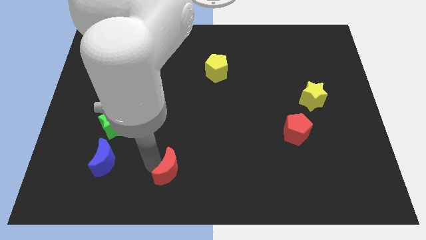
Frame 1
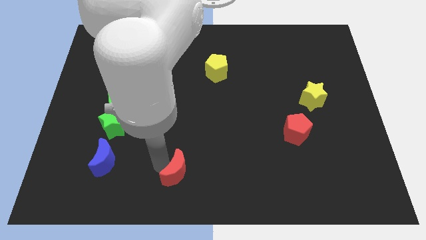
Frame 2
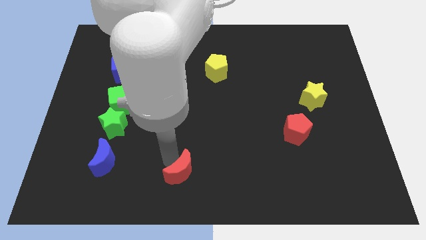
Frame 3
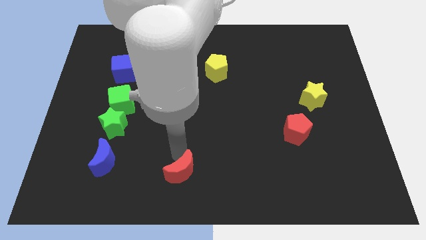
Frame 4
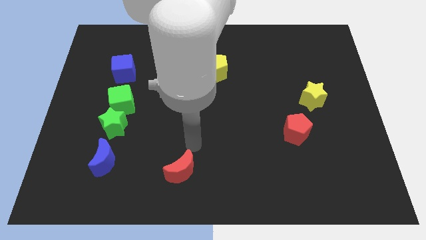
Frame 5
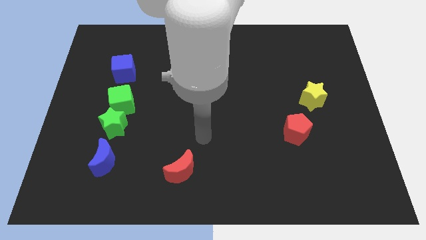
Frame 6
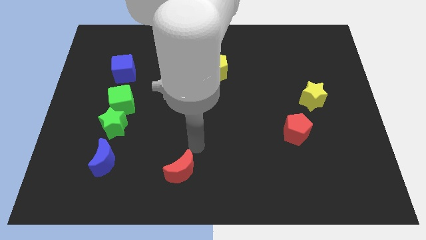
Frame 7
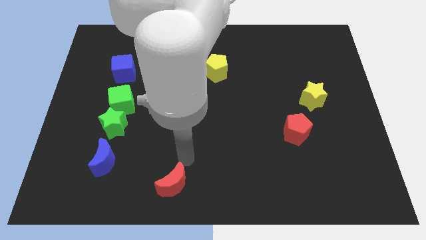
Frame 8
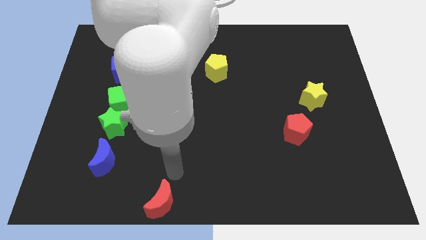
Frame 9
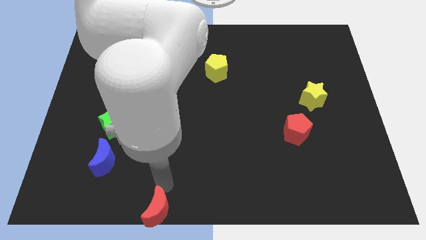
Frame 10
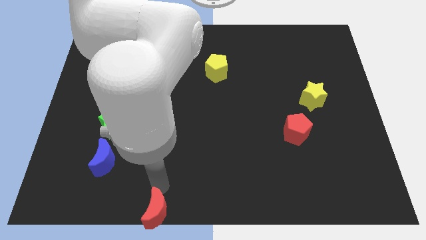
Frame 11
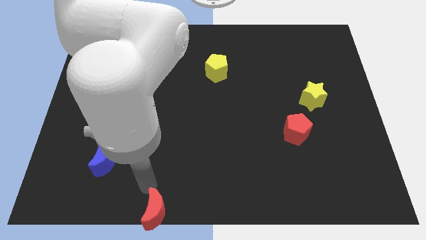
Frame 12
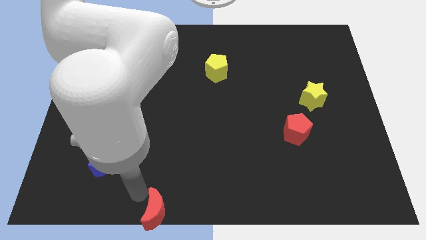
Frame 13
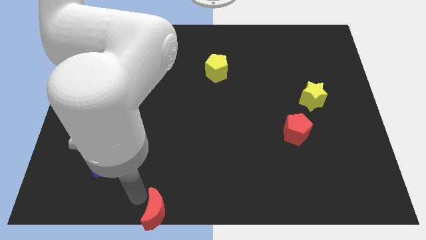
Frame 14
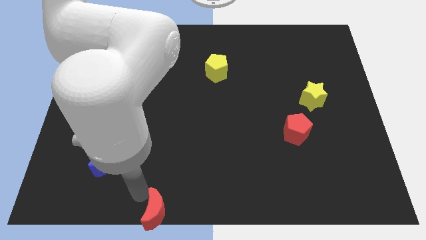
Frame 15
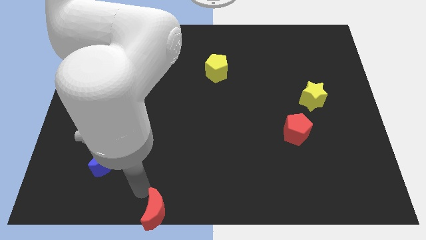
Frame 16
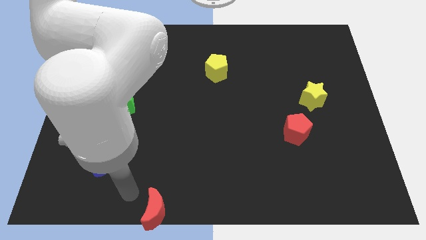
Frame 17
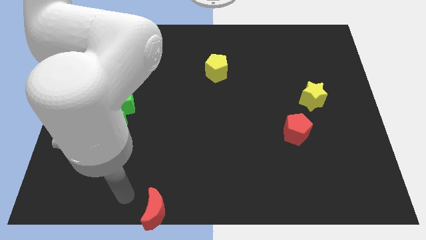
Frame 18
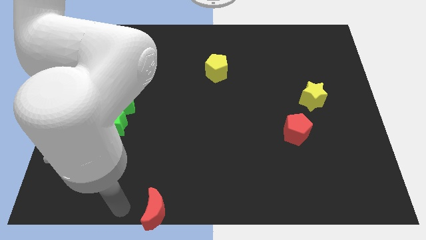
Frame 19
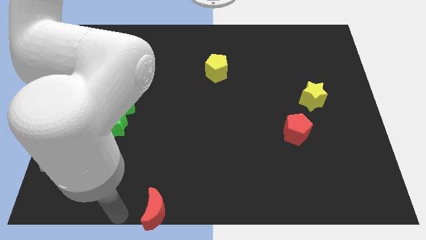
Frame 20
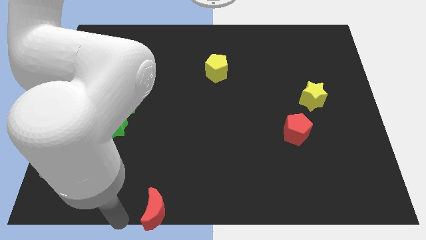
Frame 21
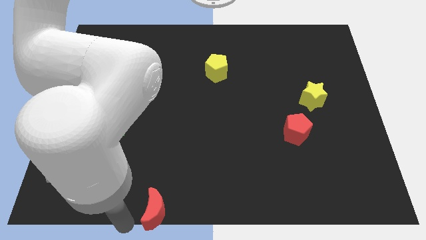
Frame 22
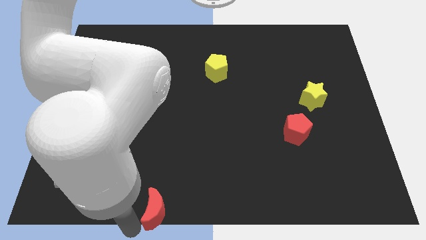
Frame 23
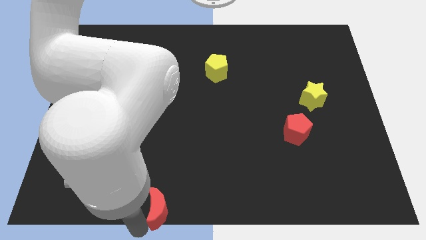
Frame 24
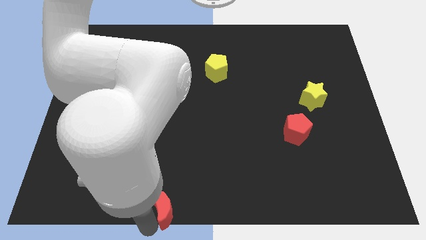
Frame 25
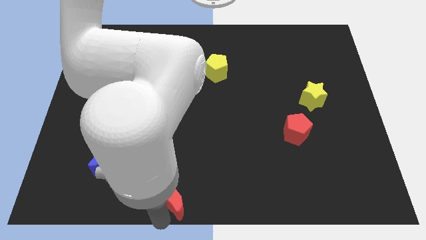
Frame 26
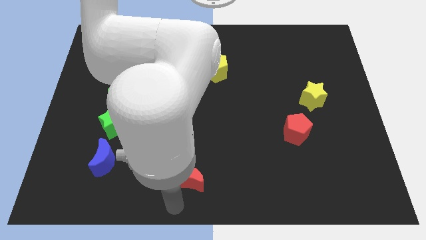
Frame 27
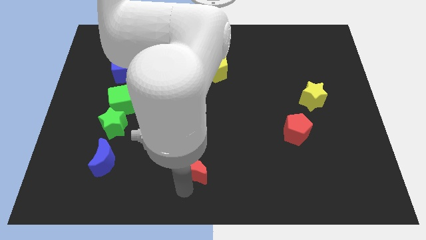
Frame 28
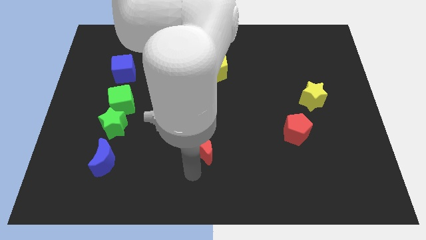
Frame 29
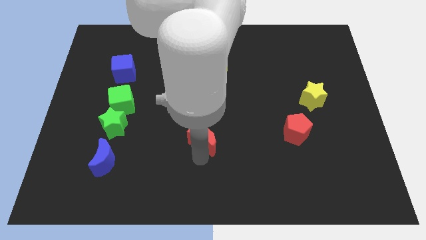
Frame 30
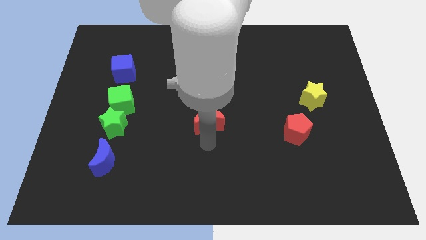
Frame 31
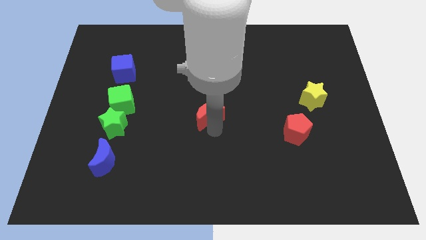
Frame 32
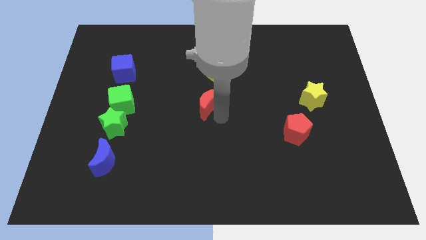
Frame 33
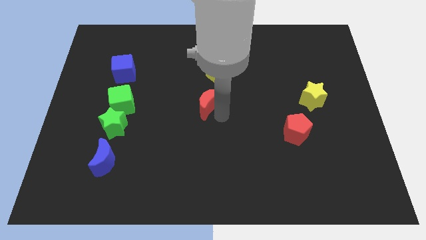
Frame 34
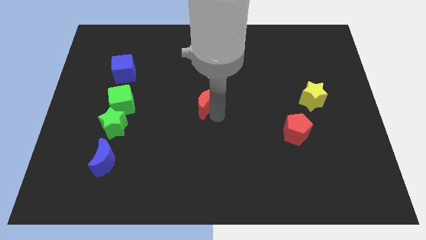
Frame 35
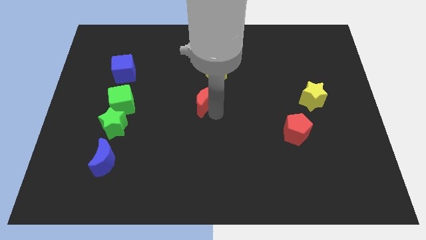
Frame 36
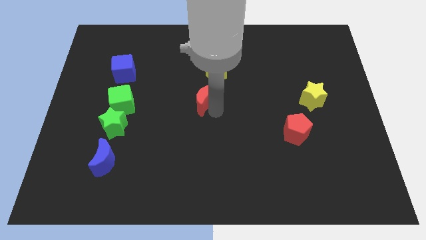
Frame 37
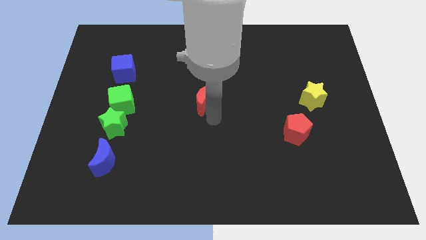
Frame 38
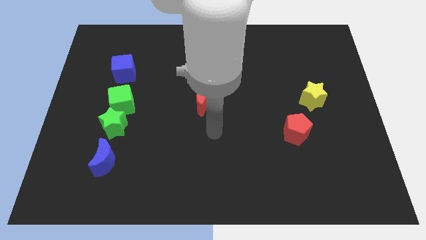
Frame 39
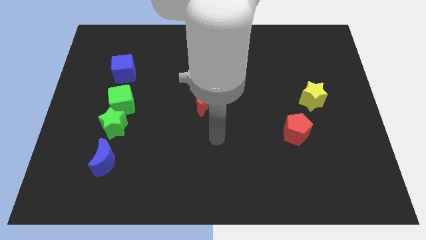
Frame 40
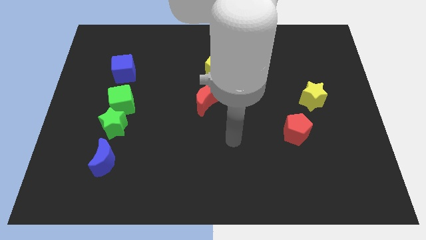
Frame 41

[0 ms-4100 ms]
place the red crescent to the bottom of the yellow pentagon

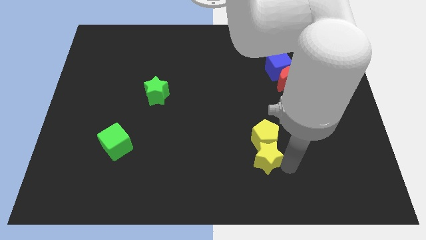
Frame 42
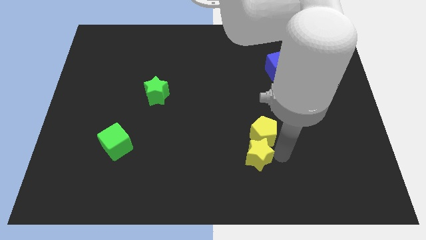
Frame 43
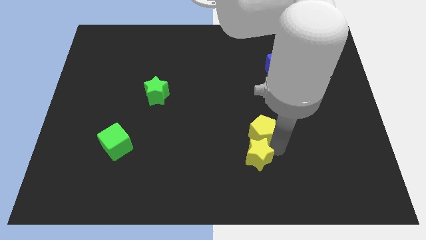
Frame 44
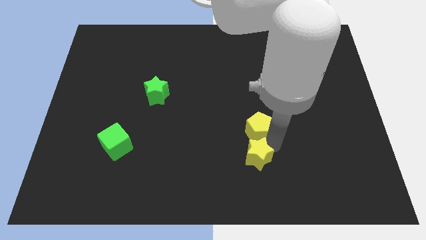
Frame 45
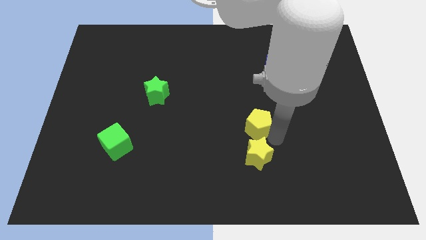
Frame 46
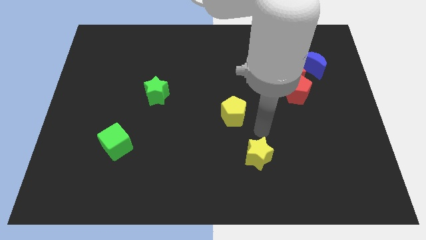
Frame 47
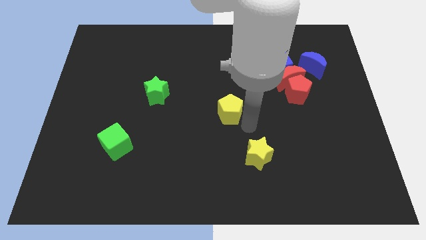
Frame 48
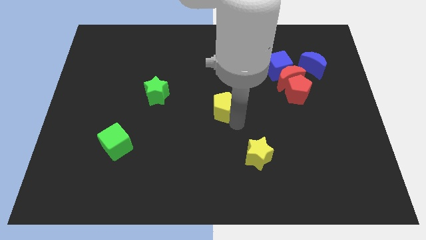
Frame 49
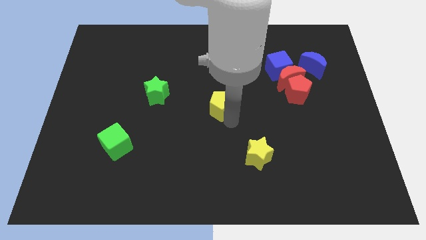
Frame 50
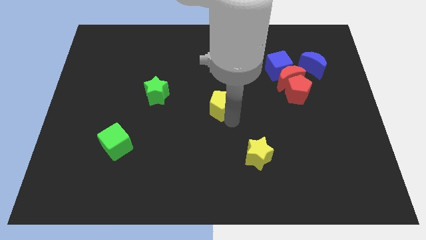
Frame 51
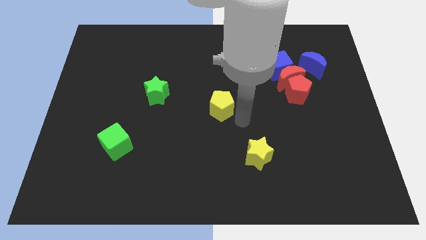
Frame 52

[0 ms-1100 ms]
move the yellow pentagon to the center of the board

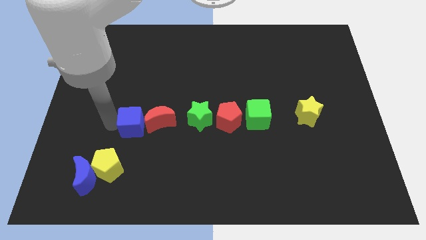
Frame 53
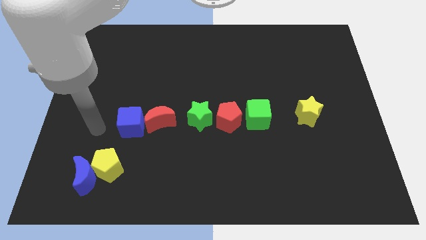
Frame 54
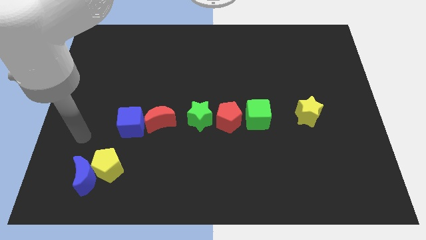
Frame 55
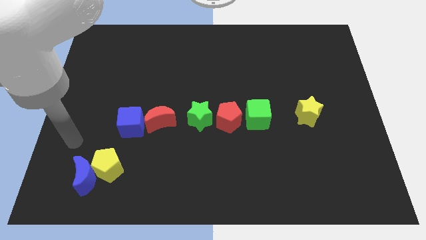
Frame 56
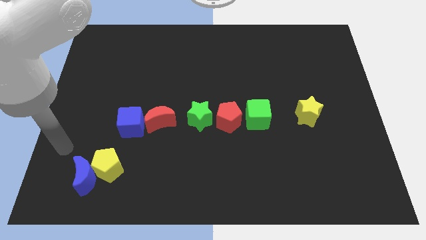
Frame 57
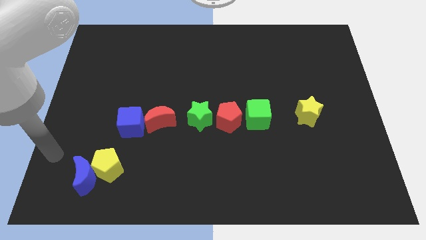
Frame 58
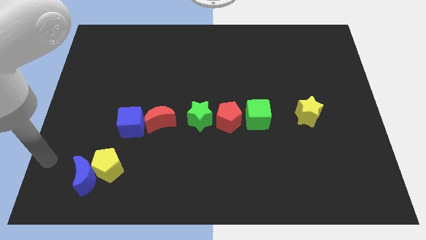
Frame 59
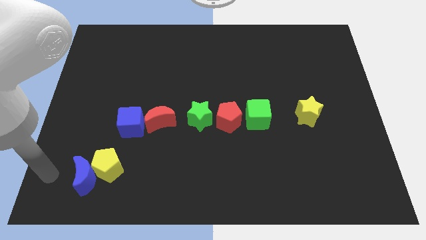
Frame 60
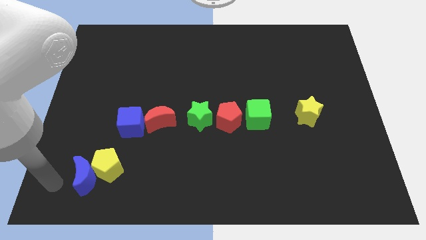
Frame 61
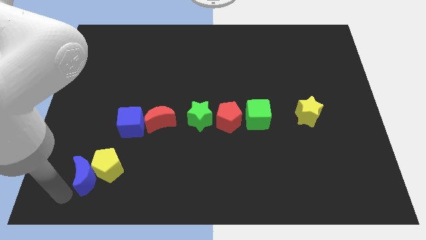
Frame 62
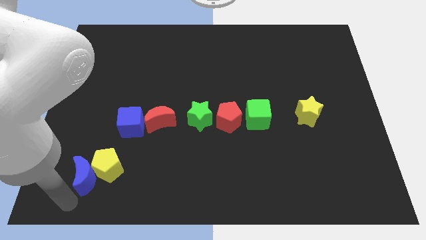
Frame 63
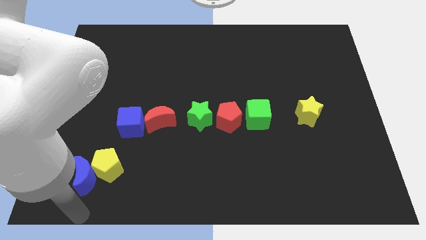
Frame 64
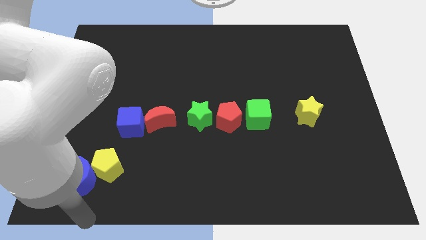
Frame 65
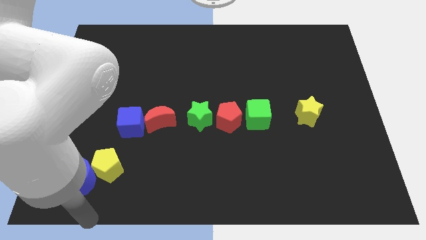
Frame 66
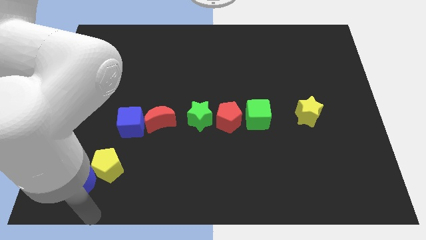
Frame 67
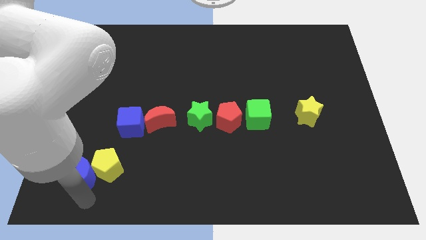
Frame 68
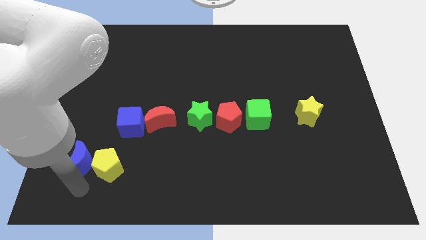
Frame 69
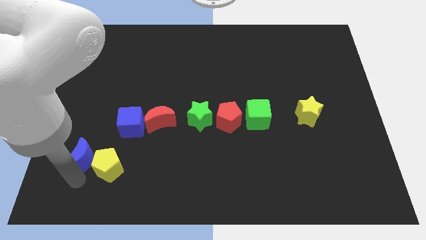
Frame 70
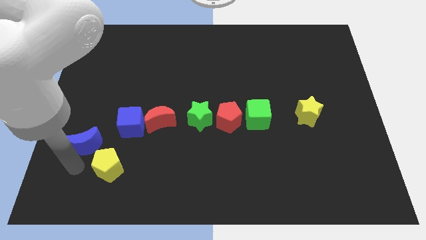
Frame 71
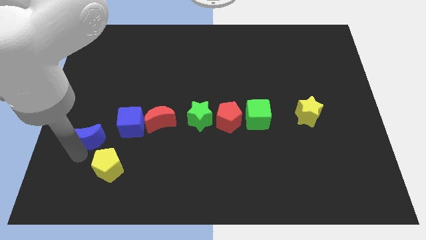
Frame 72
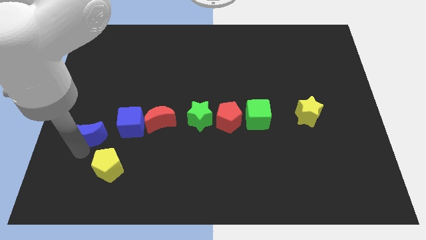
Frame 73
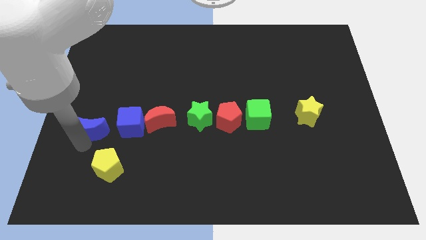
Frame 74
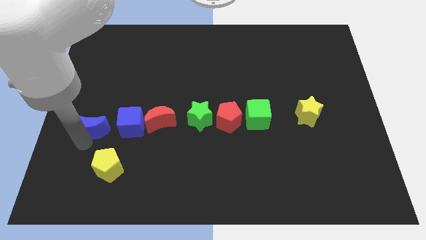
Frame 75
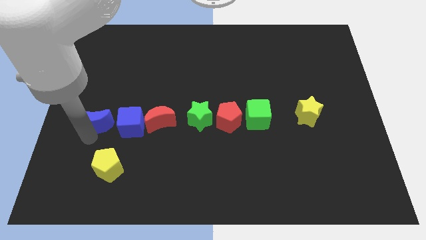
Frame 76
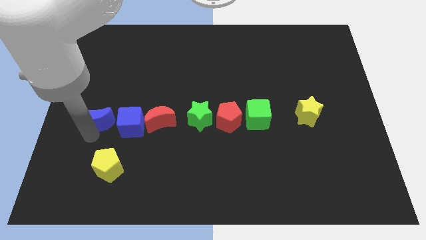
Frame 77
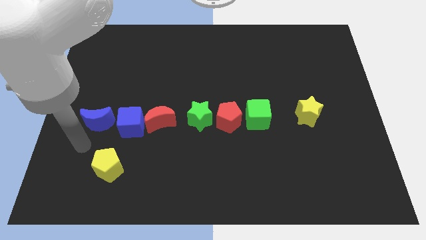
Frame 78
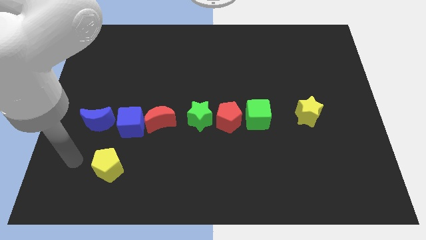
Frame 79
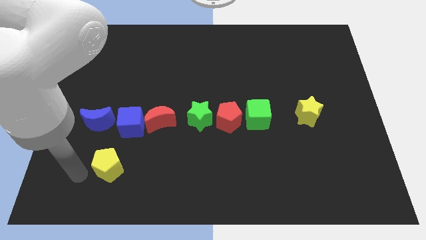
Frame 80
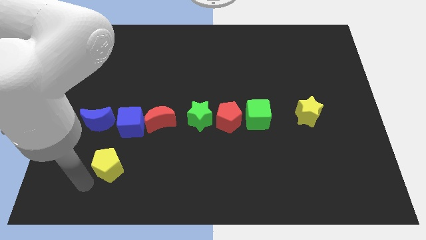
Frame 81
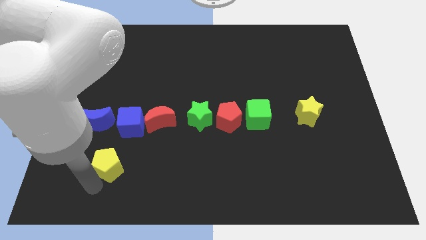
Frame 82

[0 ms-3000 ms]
push the blue crescent to the left of the blue cube

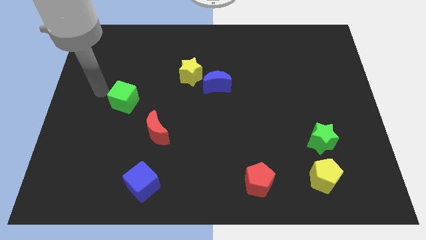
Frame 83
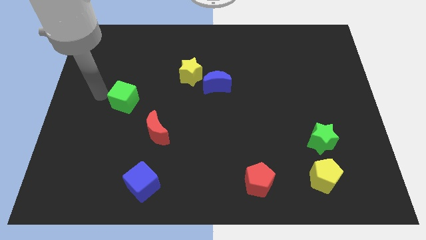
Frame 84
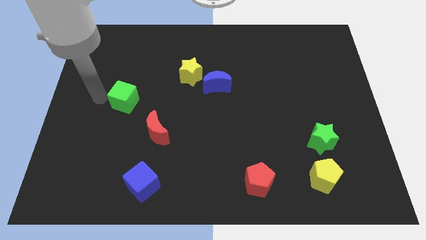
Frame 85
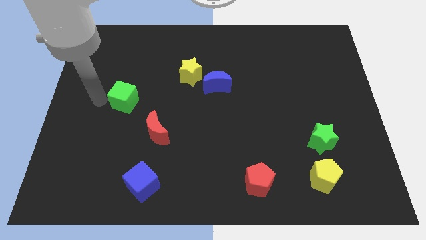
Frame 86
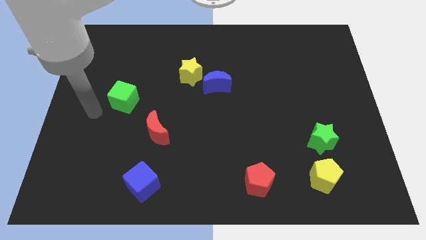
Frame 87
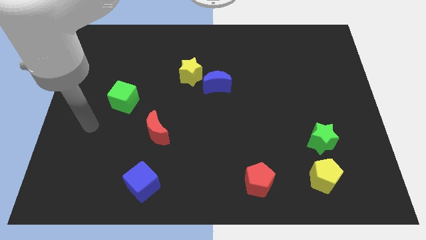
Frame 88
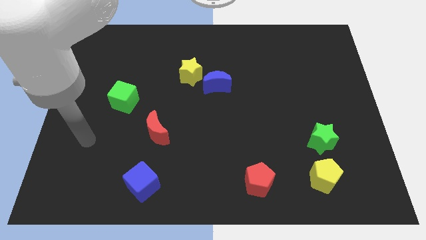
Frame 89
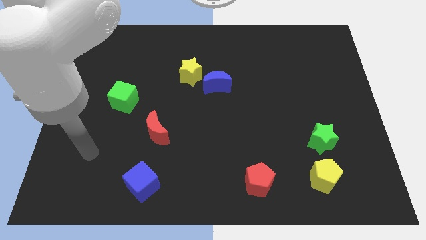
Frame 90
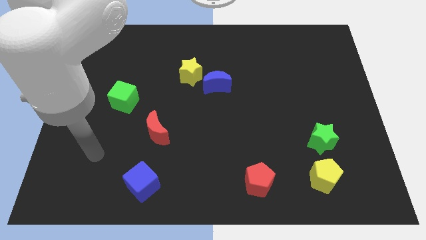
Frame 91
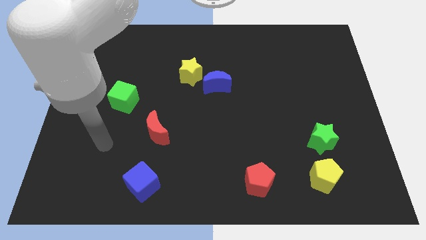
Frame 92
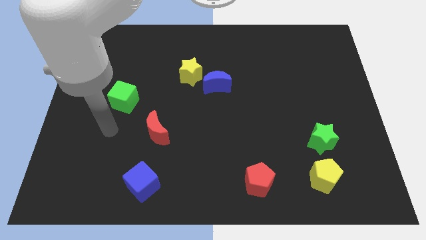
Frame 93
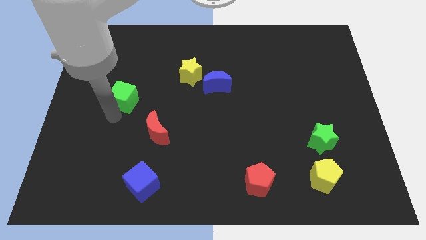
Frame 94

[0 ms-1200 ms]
move the arm to the bottom of the green cube
